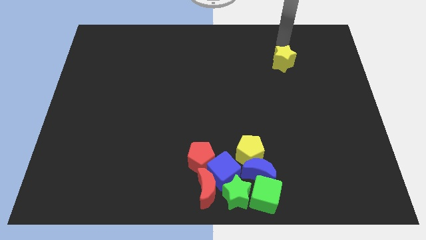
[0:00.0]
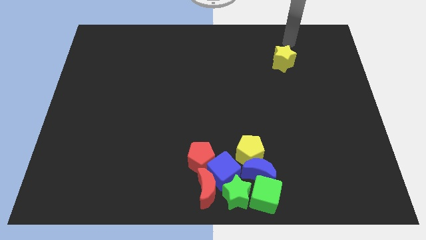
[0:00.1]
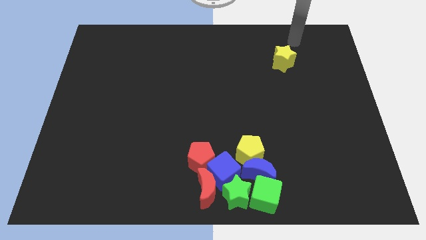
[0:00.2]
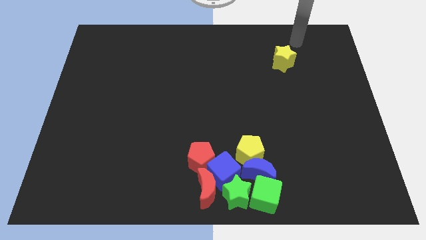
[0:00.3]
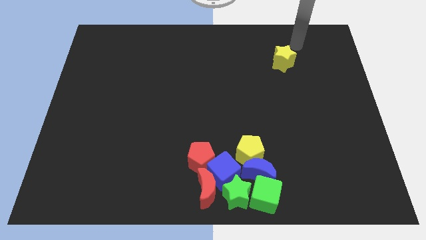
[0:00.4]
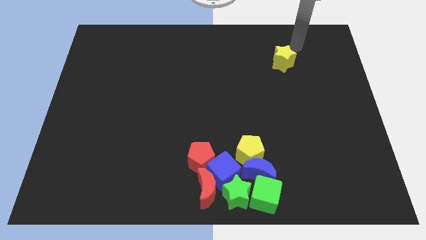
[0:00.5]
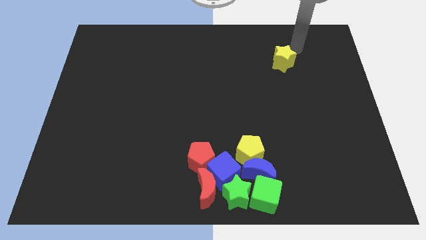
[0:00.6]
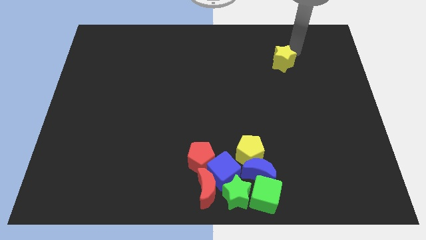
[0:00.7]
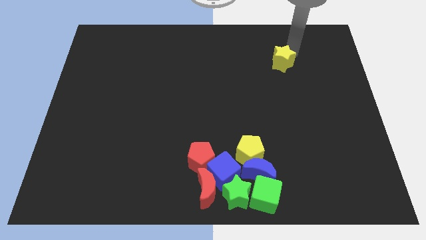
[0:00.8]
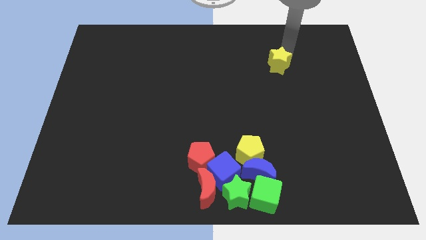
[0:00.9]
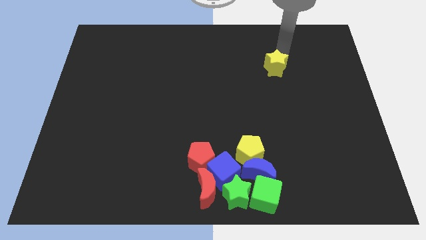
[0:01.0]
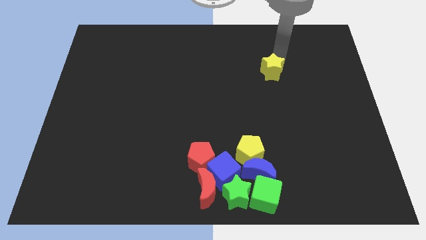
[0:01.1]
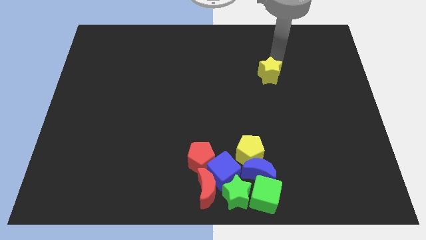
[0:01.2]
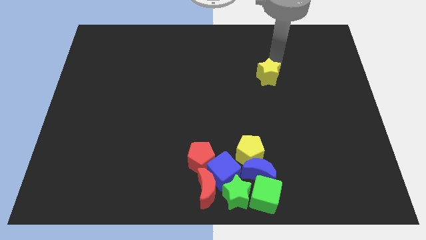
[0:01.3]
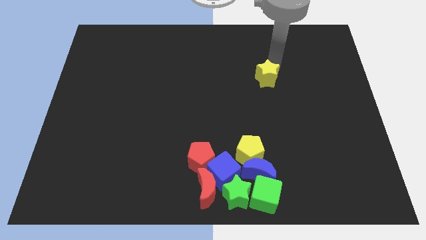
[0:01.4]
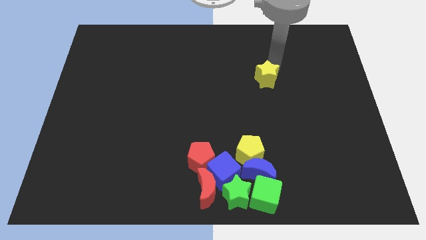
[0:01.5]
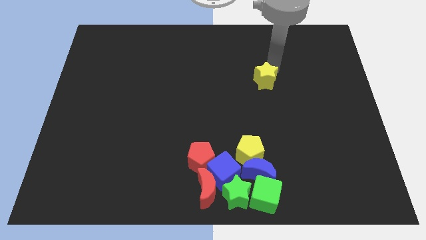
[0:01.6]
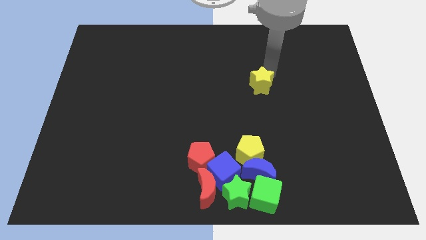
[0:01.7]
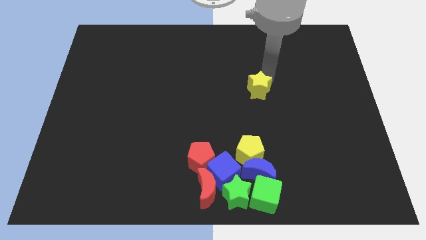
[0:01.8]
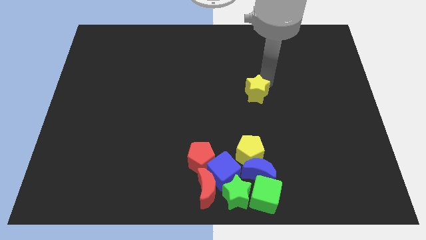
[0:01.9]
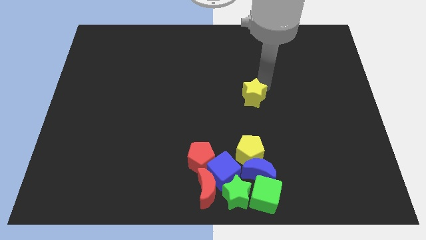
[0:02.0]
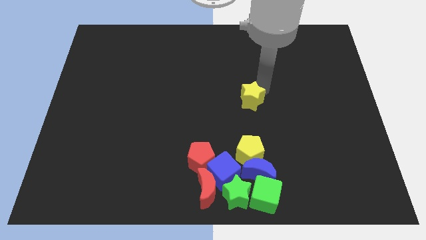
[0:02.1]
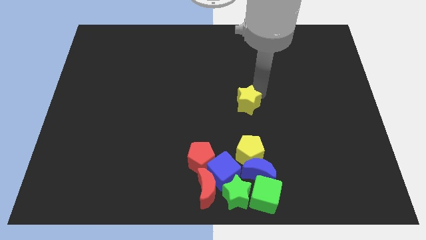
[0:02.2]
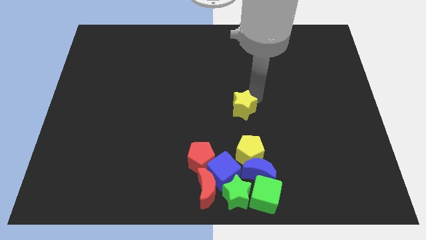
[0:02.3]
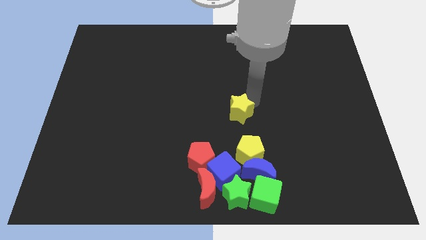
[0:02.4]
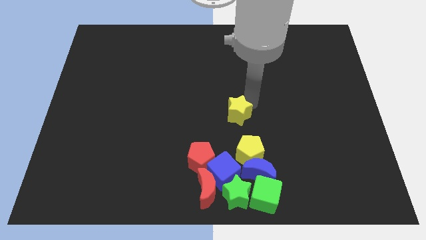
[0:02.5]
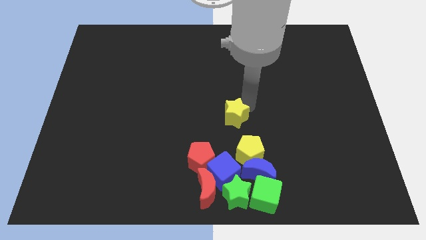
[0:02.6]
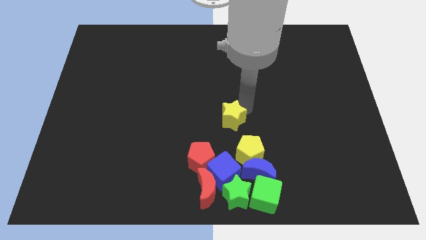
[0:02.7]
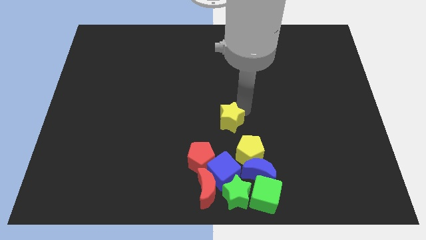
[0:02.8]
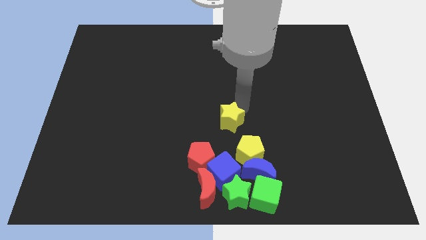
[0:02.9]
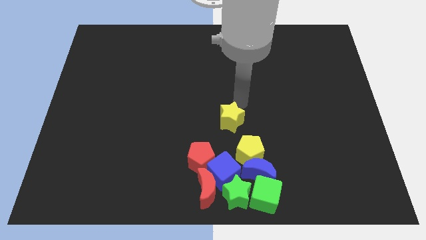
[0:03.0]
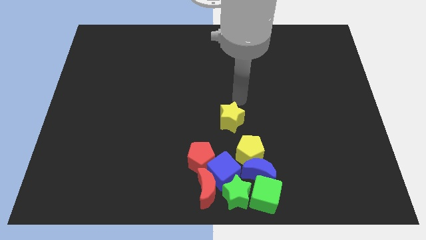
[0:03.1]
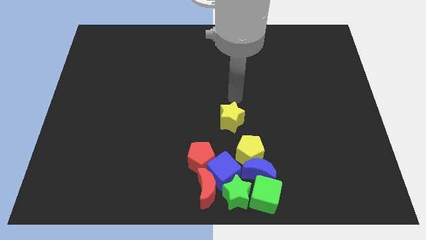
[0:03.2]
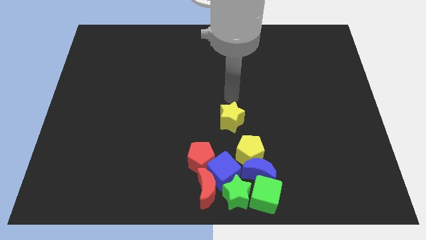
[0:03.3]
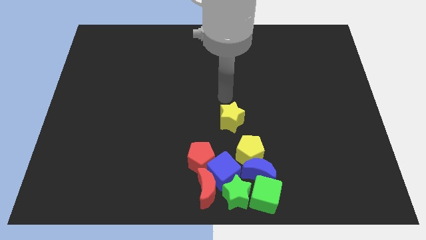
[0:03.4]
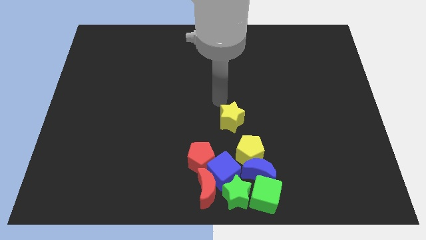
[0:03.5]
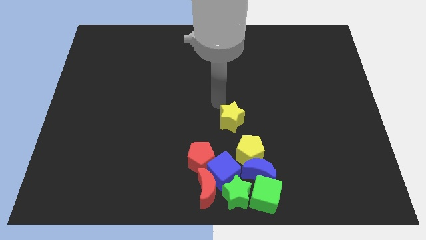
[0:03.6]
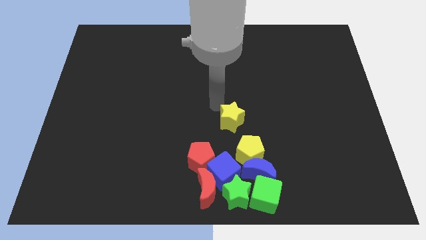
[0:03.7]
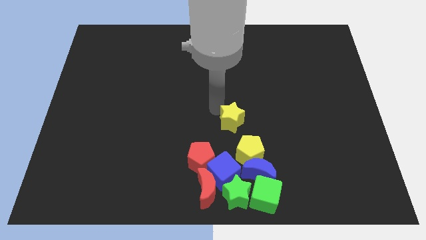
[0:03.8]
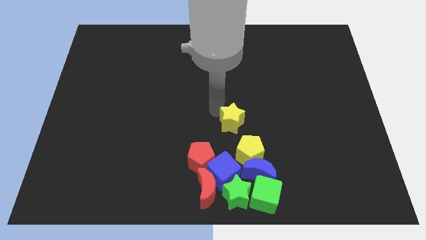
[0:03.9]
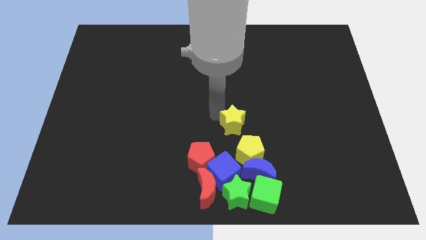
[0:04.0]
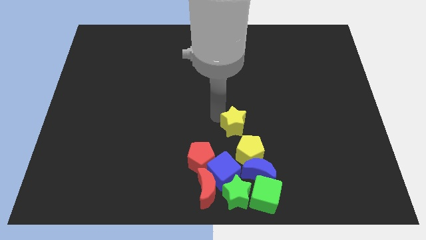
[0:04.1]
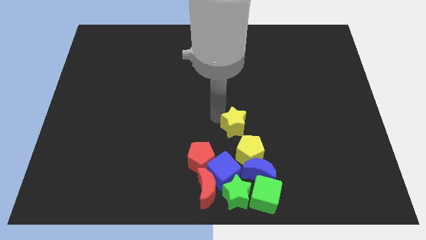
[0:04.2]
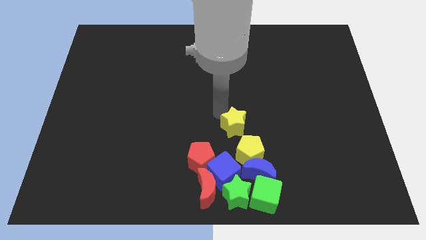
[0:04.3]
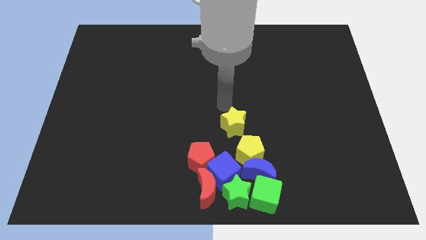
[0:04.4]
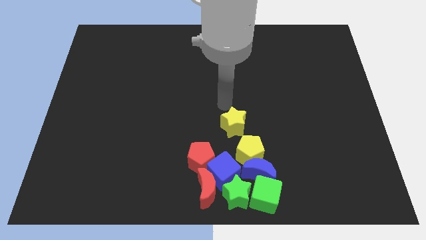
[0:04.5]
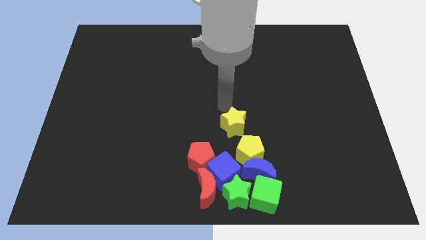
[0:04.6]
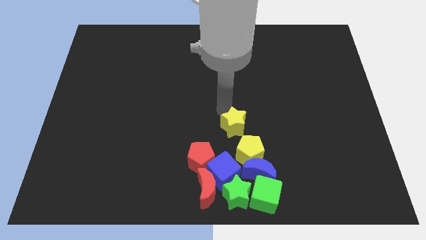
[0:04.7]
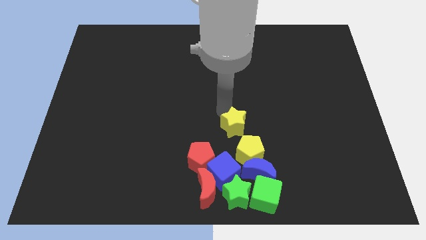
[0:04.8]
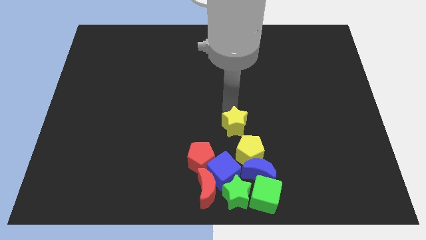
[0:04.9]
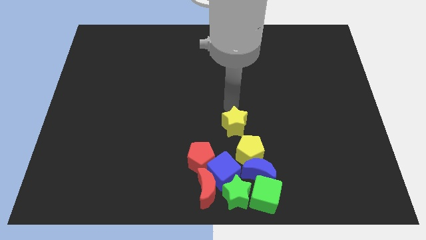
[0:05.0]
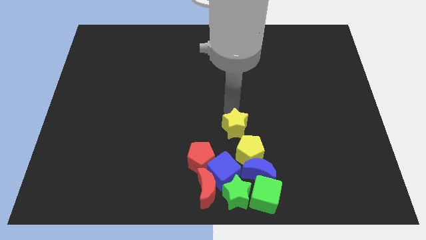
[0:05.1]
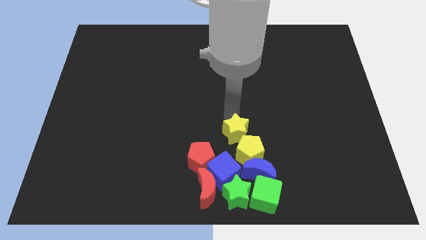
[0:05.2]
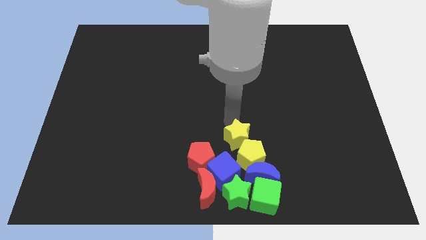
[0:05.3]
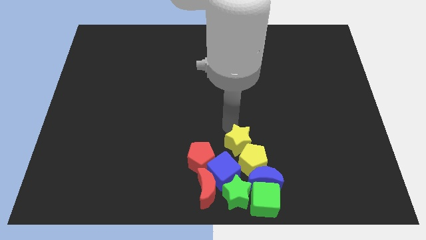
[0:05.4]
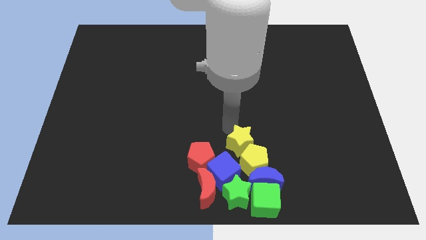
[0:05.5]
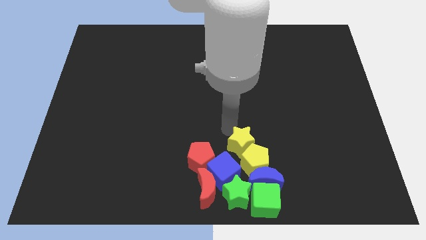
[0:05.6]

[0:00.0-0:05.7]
push the yellow star into a group of blocks

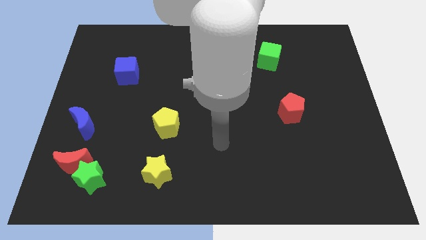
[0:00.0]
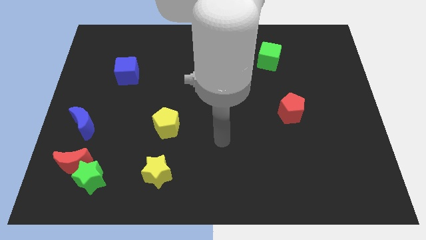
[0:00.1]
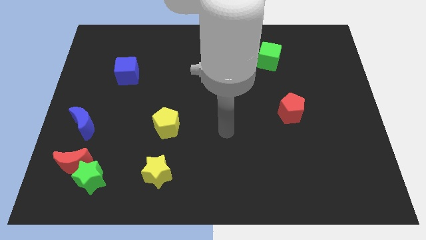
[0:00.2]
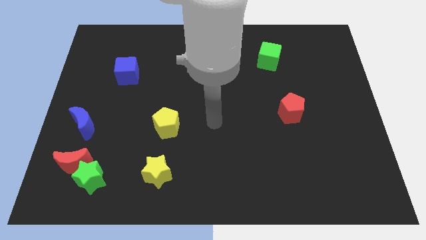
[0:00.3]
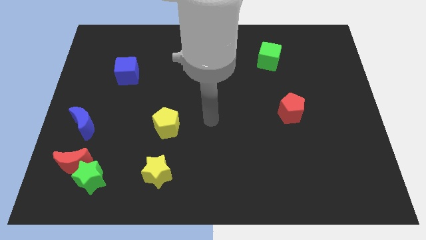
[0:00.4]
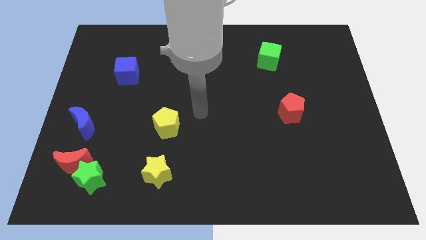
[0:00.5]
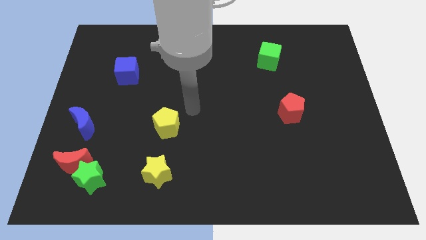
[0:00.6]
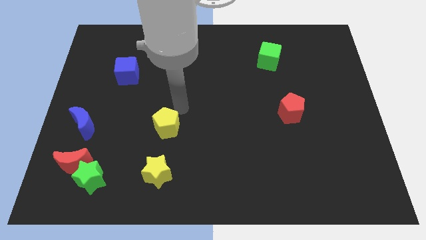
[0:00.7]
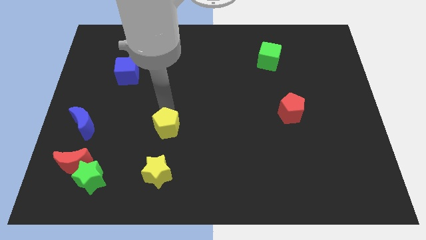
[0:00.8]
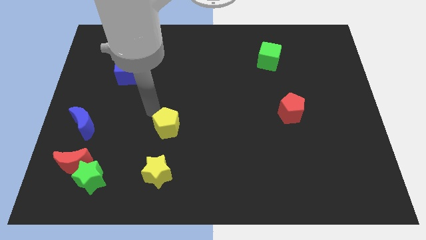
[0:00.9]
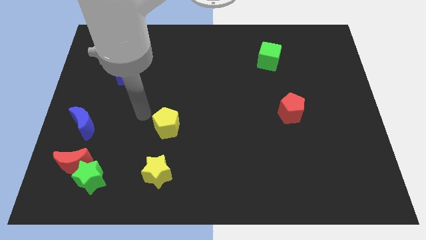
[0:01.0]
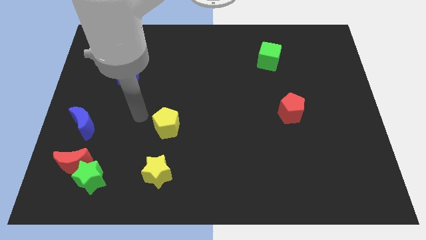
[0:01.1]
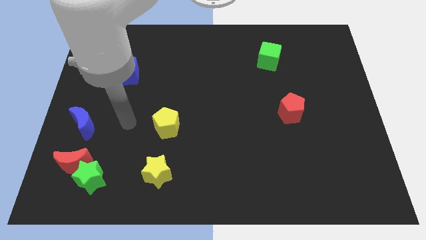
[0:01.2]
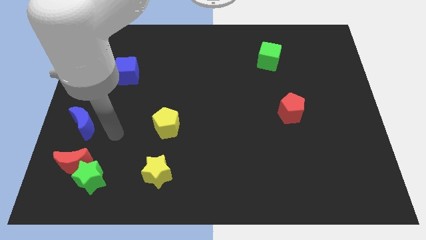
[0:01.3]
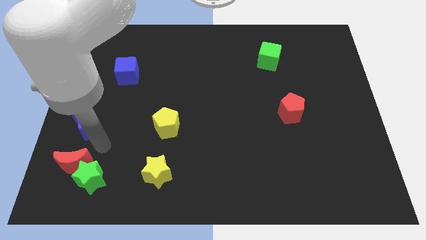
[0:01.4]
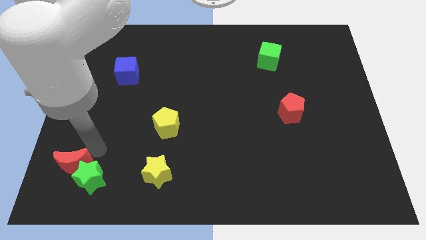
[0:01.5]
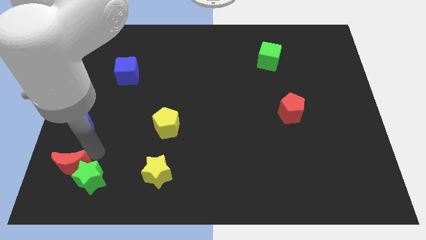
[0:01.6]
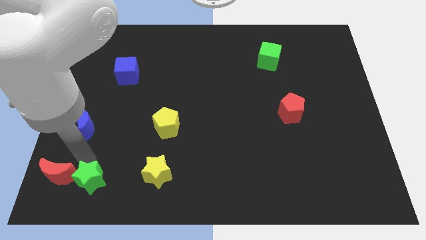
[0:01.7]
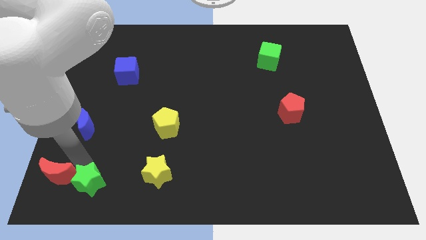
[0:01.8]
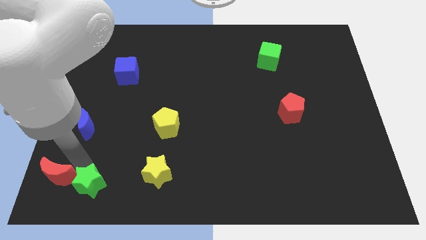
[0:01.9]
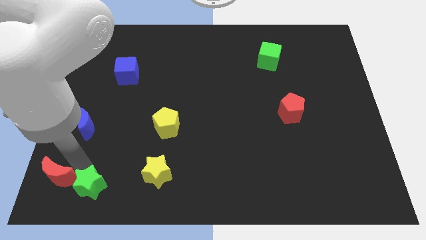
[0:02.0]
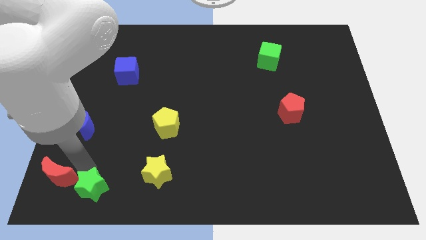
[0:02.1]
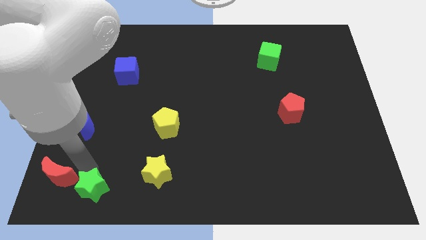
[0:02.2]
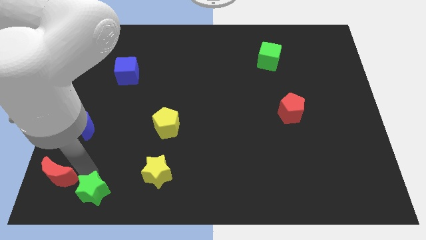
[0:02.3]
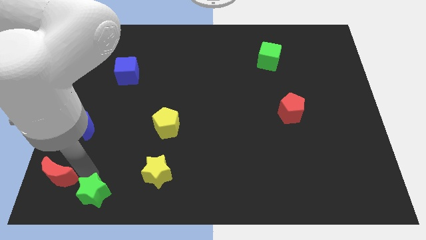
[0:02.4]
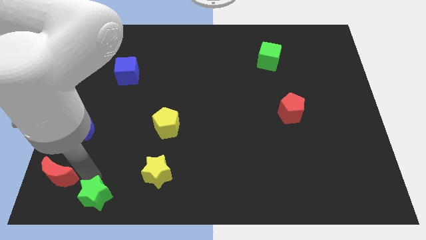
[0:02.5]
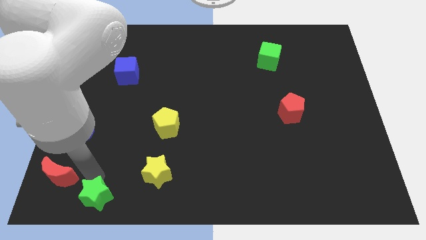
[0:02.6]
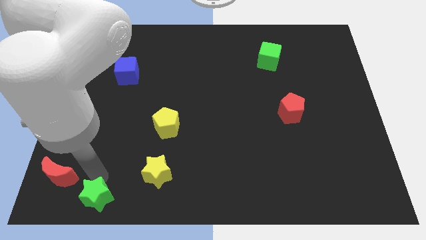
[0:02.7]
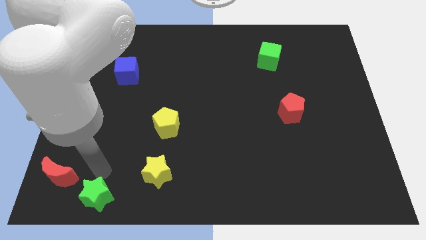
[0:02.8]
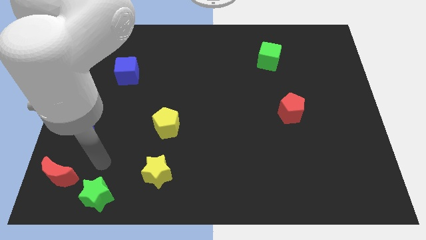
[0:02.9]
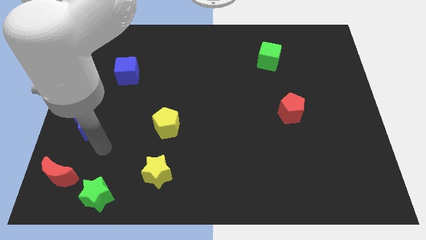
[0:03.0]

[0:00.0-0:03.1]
separate the green star from red moon

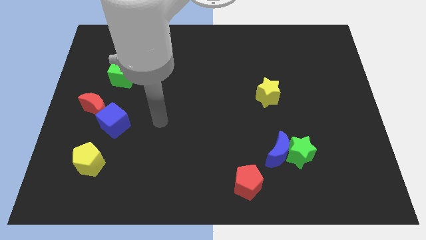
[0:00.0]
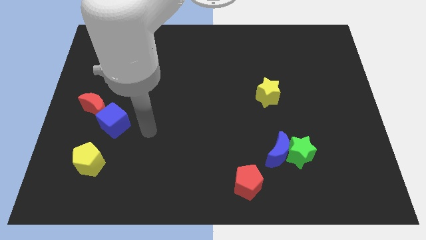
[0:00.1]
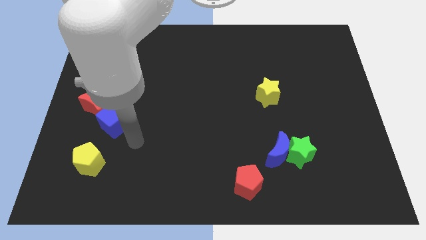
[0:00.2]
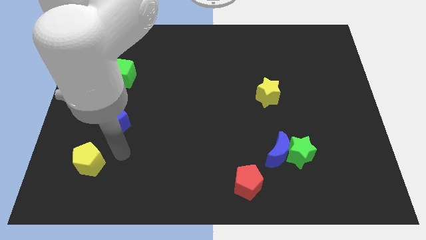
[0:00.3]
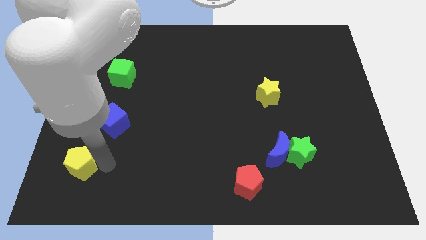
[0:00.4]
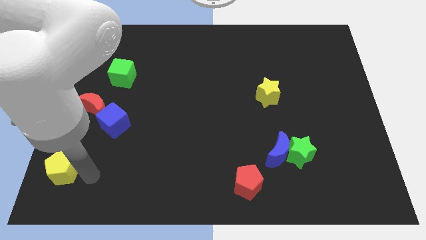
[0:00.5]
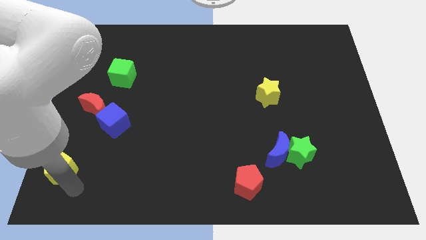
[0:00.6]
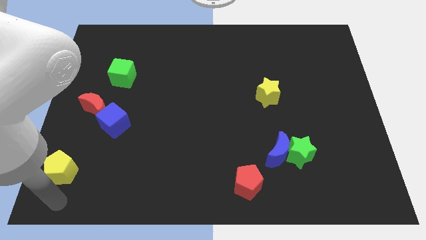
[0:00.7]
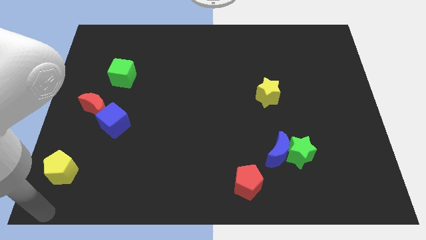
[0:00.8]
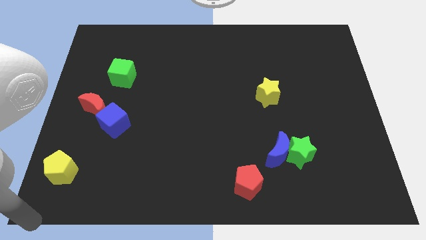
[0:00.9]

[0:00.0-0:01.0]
push the yellow pentagon downward
